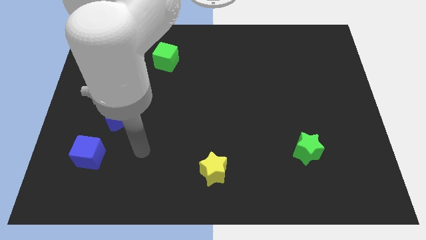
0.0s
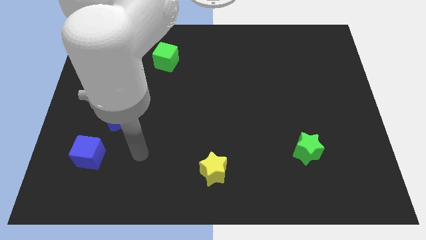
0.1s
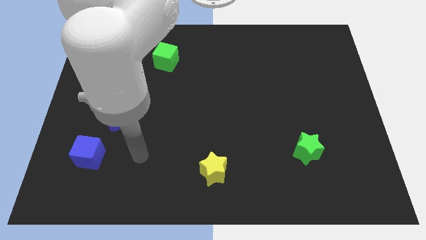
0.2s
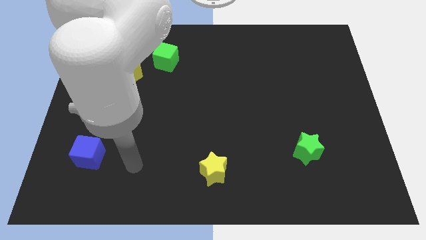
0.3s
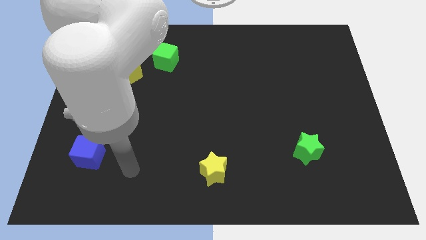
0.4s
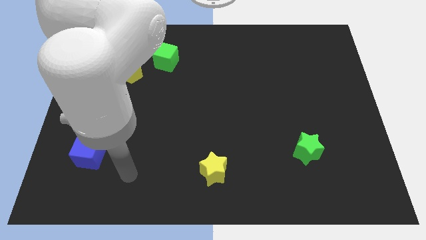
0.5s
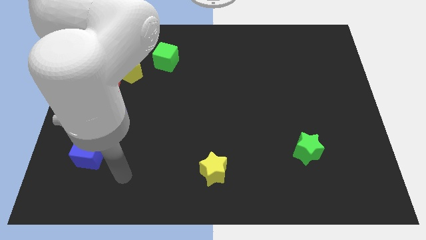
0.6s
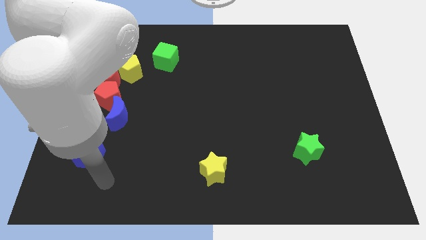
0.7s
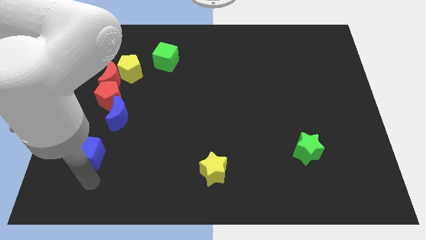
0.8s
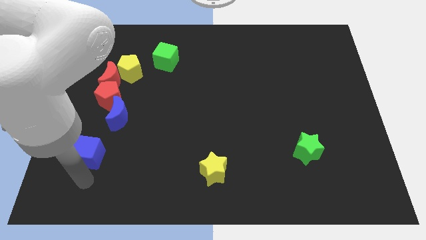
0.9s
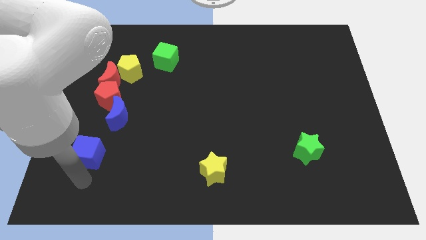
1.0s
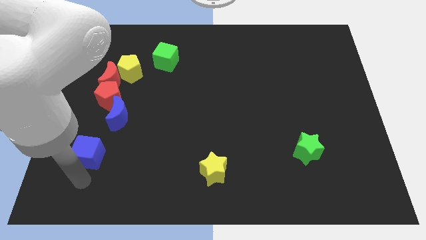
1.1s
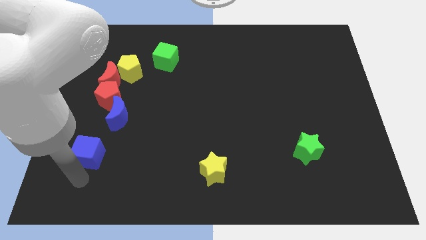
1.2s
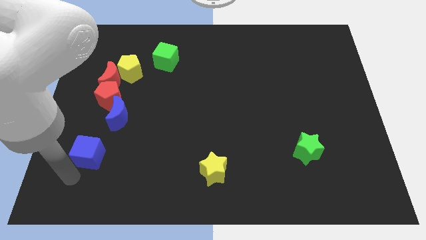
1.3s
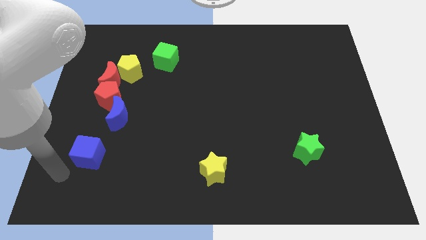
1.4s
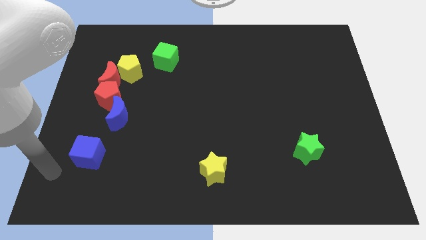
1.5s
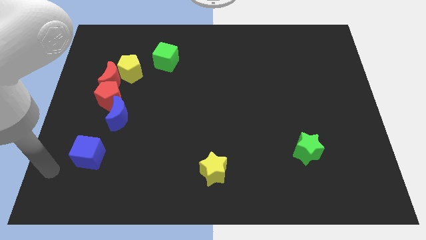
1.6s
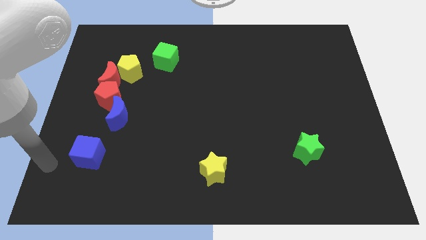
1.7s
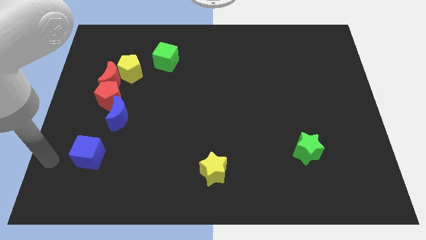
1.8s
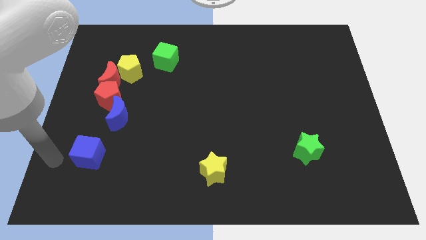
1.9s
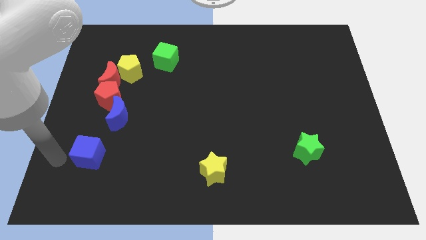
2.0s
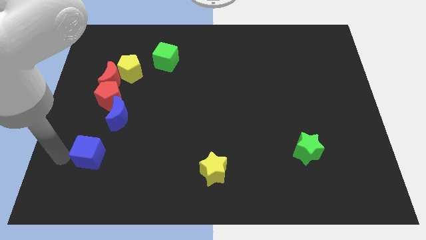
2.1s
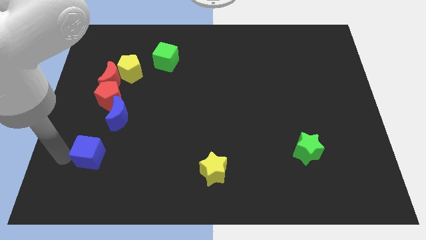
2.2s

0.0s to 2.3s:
place the arm left to the blue cube

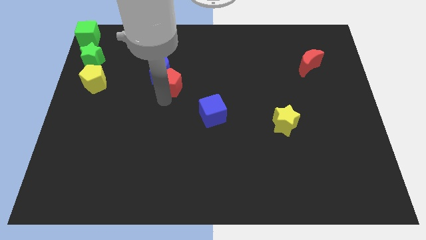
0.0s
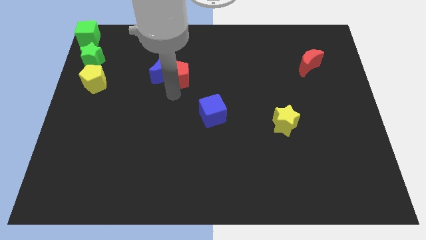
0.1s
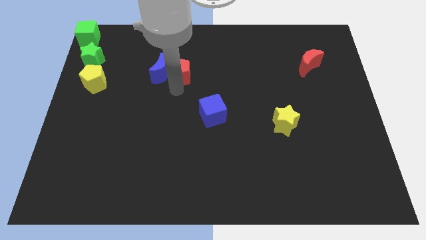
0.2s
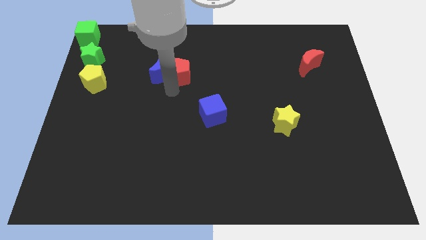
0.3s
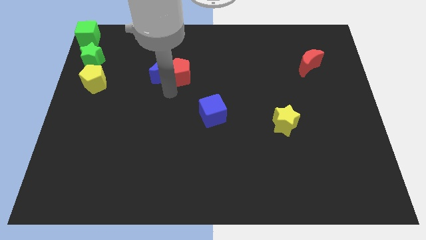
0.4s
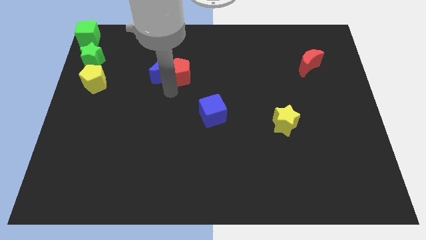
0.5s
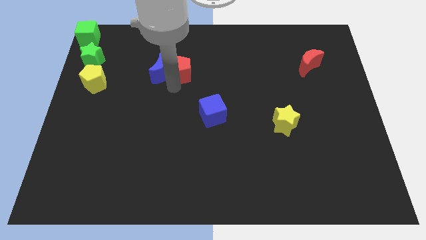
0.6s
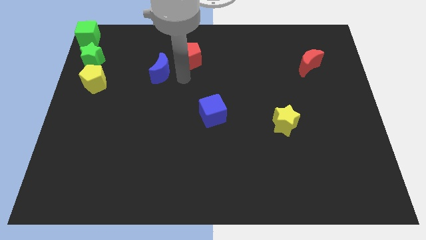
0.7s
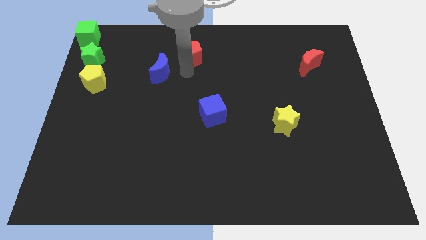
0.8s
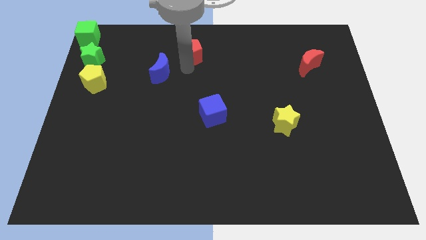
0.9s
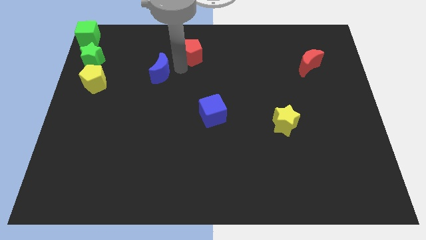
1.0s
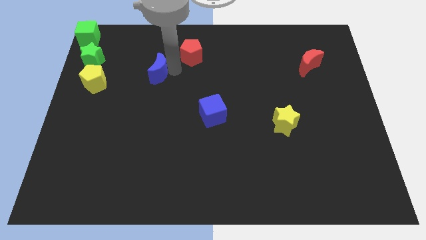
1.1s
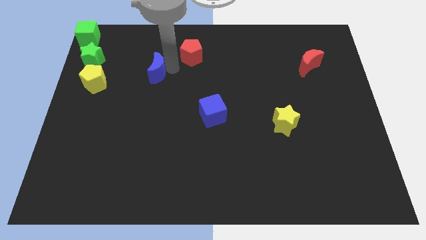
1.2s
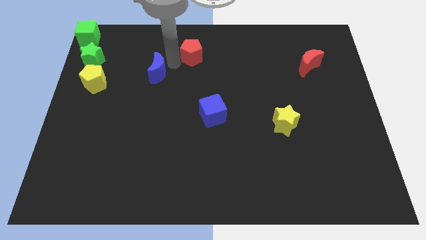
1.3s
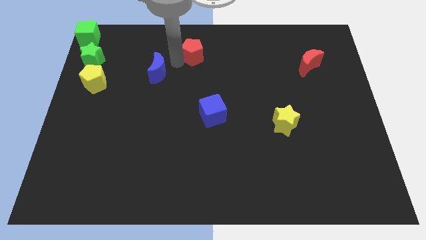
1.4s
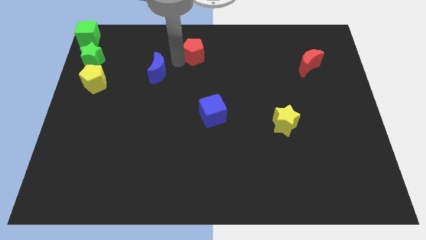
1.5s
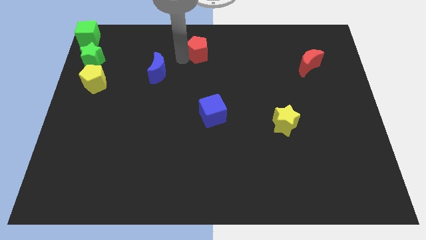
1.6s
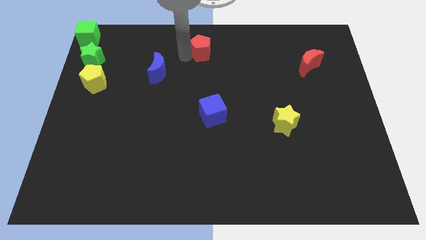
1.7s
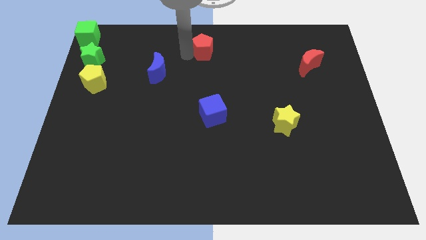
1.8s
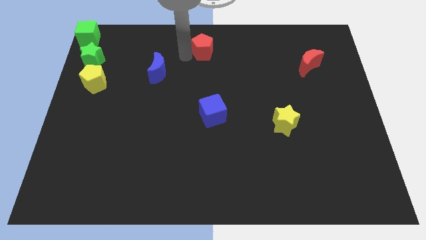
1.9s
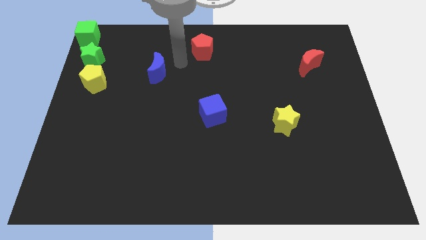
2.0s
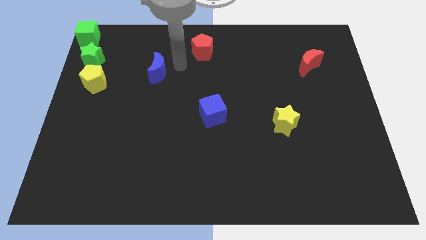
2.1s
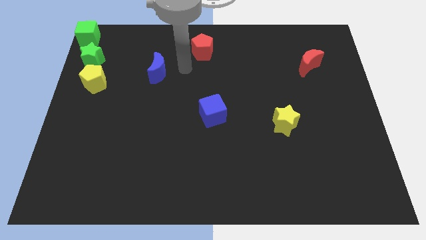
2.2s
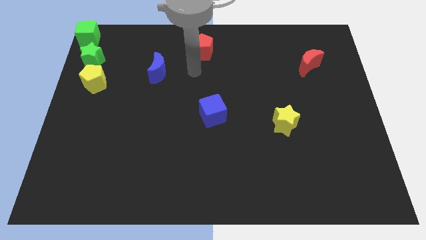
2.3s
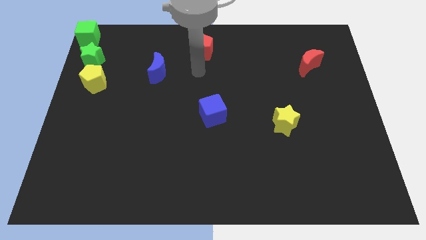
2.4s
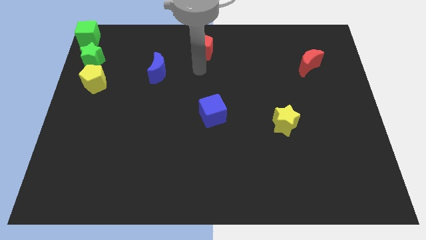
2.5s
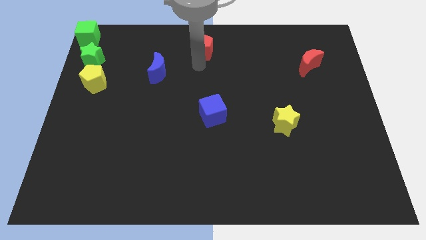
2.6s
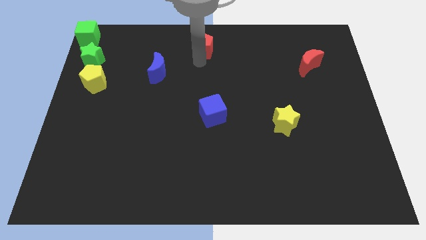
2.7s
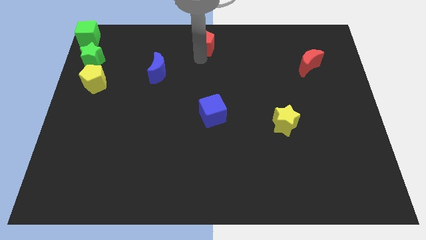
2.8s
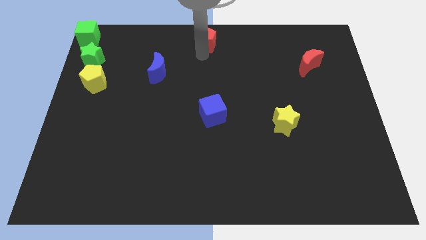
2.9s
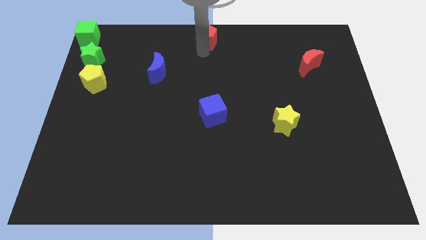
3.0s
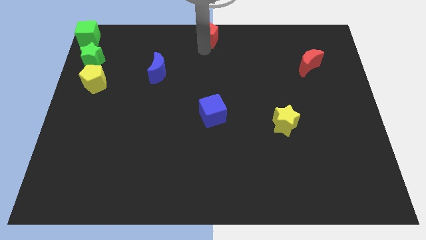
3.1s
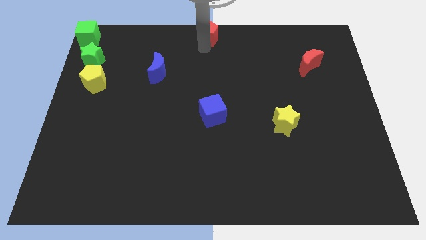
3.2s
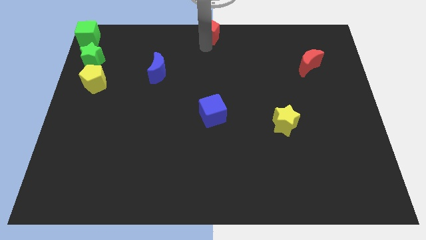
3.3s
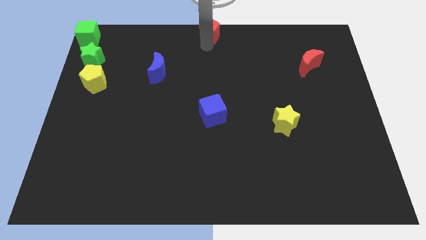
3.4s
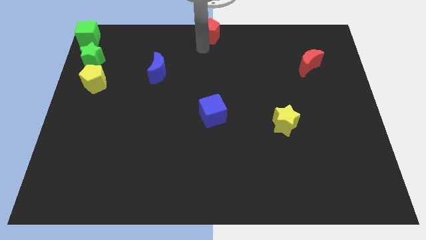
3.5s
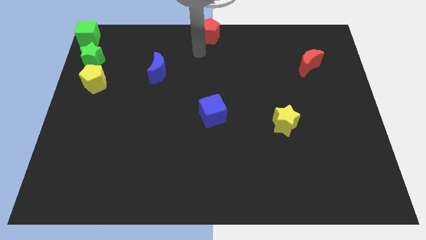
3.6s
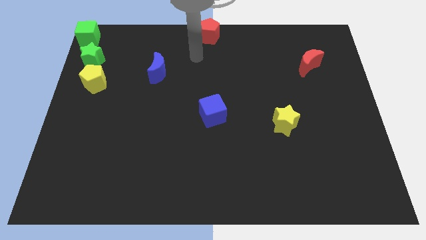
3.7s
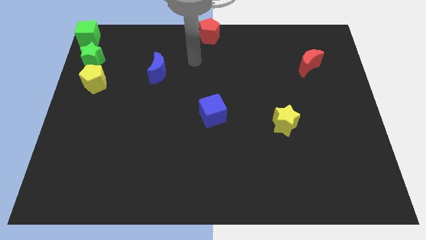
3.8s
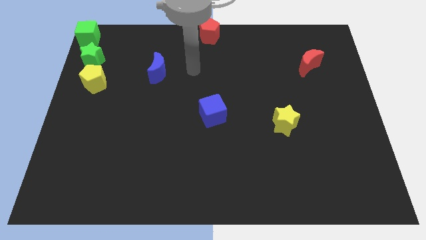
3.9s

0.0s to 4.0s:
place the red pentagon at the top center of the board

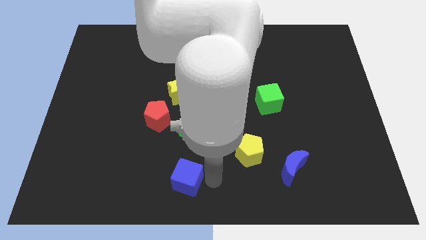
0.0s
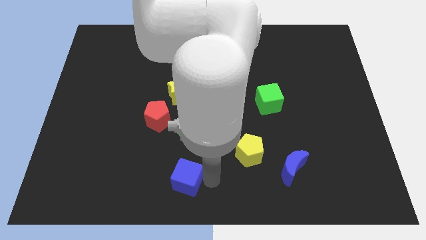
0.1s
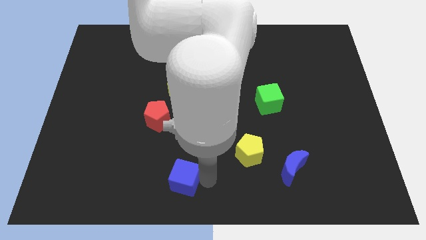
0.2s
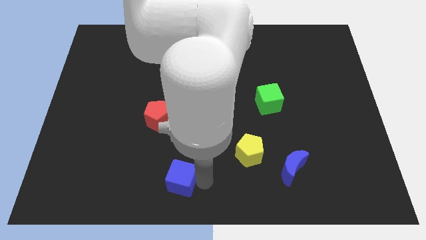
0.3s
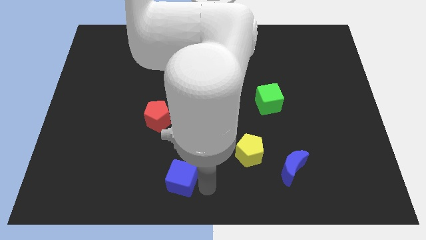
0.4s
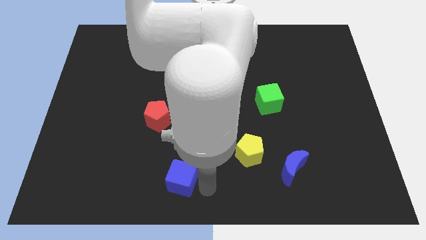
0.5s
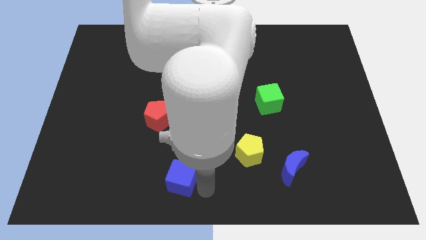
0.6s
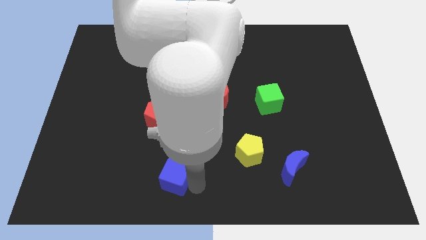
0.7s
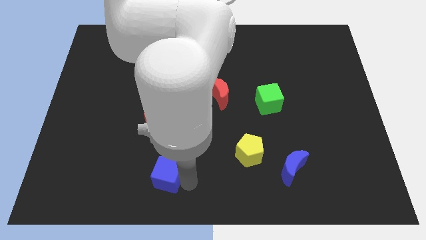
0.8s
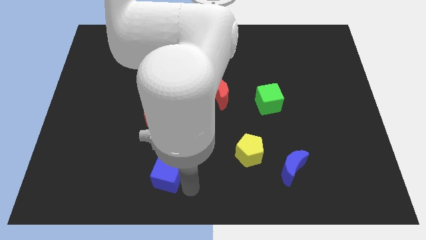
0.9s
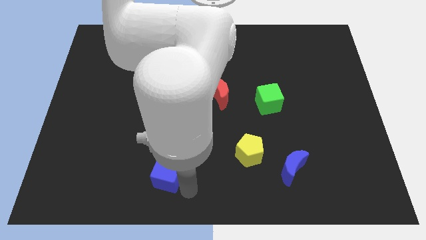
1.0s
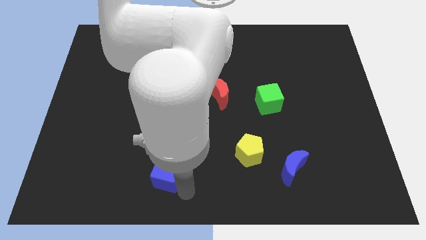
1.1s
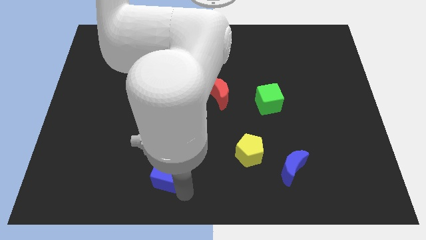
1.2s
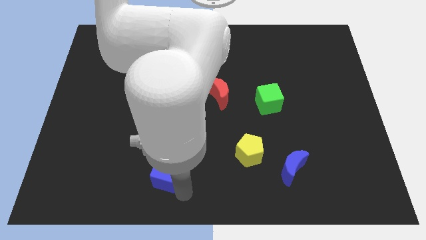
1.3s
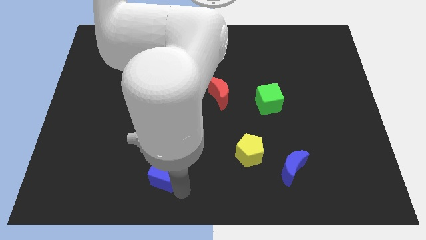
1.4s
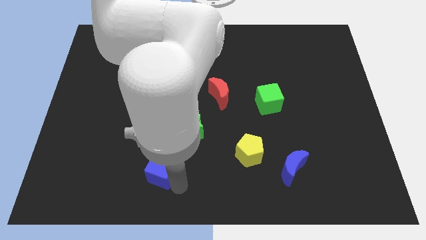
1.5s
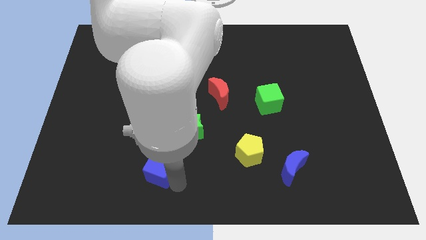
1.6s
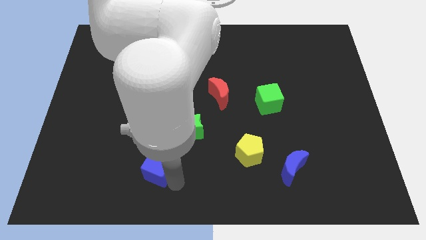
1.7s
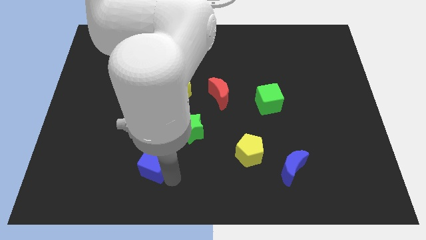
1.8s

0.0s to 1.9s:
place the blue cube below the red pentagon

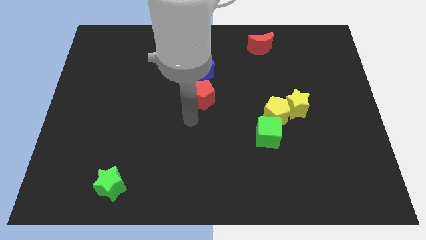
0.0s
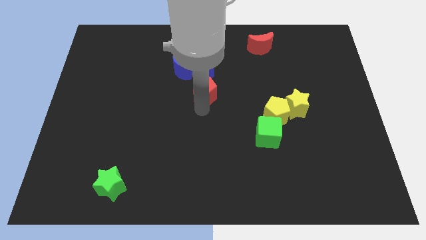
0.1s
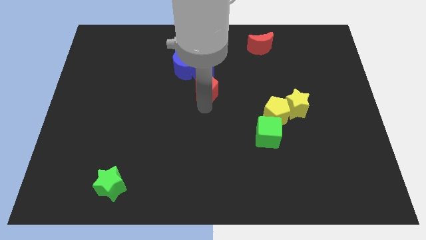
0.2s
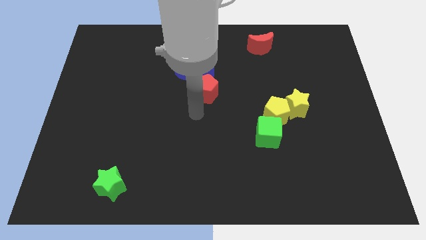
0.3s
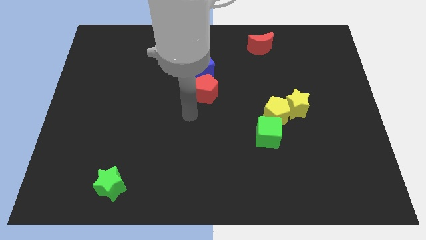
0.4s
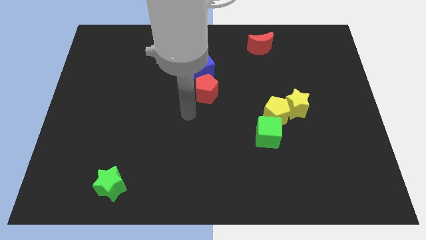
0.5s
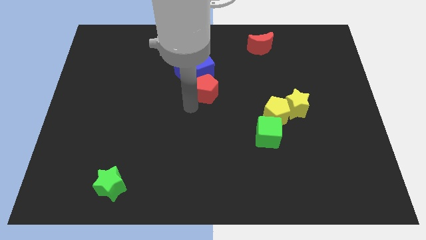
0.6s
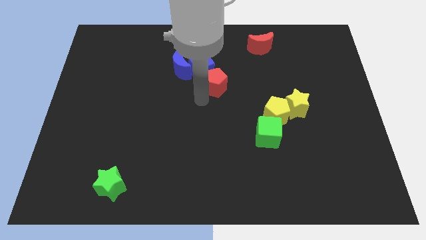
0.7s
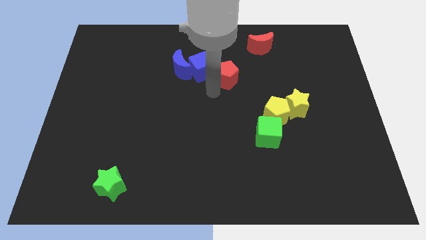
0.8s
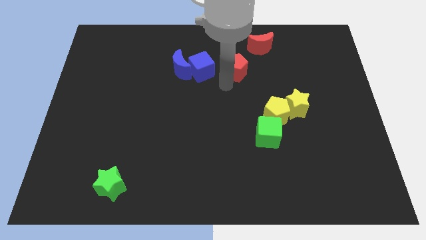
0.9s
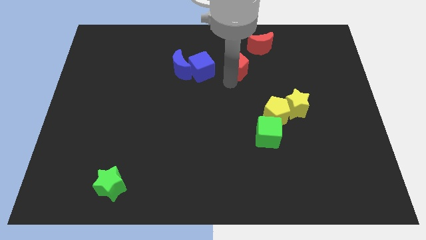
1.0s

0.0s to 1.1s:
place the red pentagon to the right side of the blue cube
